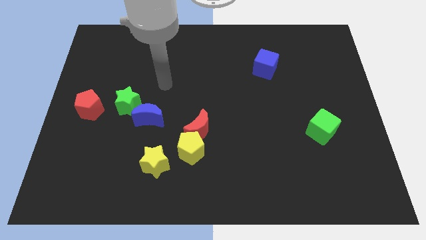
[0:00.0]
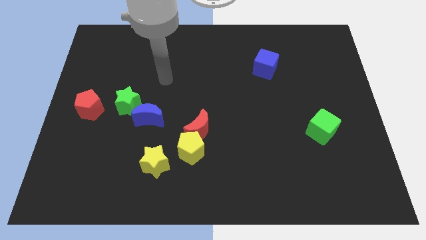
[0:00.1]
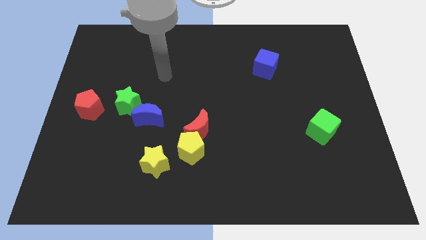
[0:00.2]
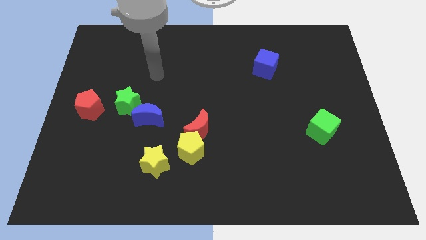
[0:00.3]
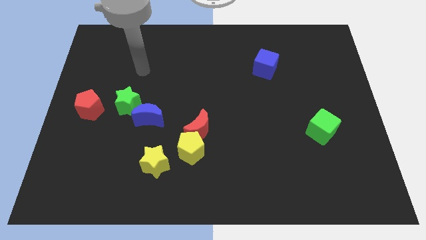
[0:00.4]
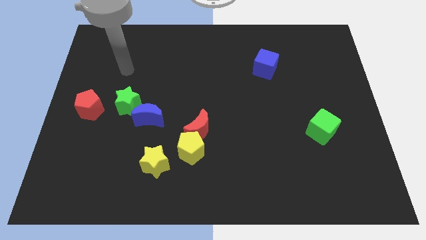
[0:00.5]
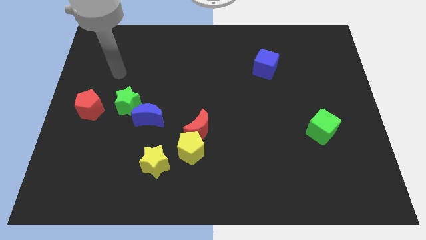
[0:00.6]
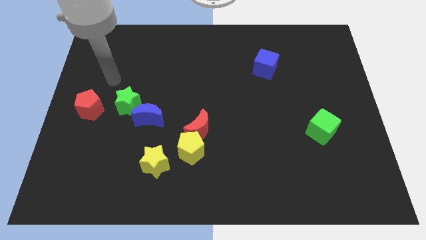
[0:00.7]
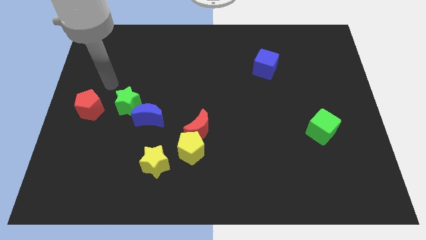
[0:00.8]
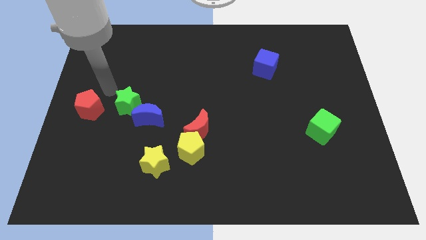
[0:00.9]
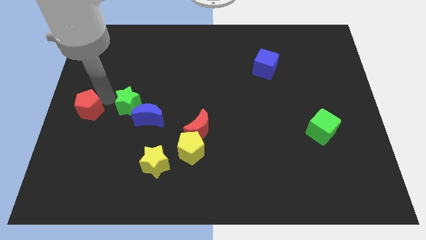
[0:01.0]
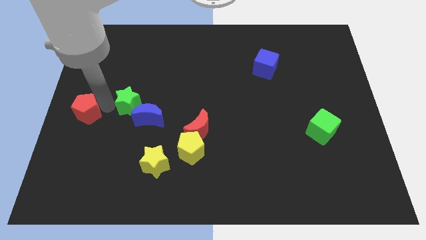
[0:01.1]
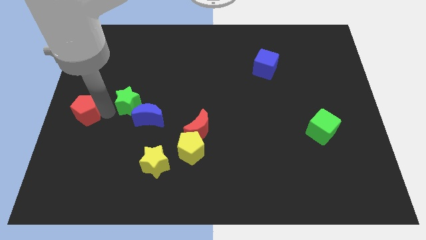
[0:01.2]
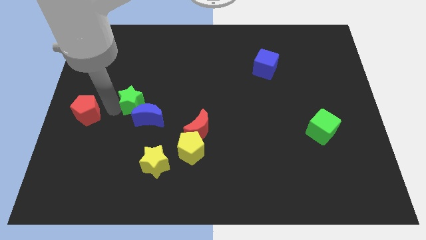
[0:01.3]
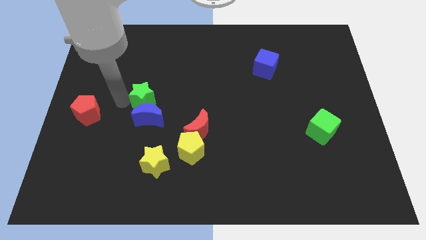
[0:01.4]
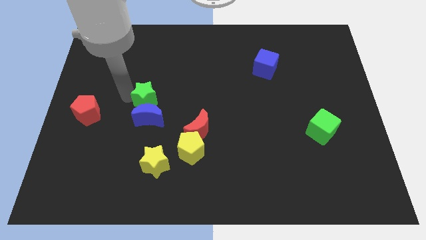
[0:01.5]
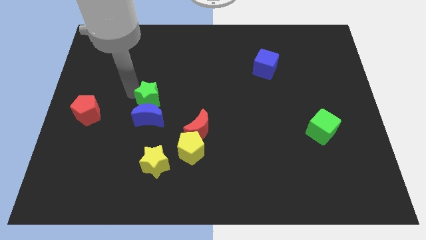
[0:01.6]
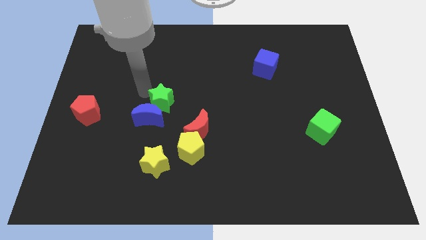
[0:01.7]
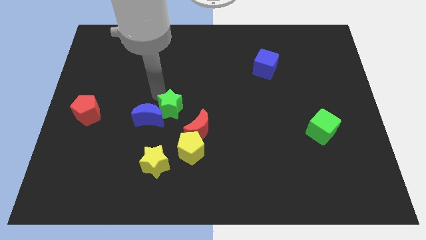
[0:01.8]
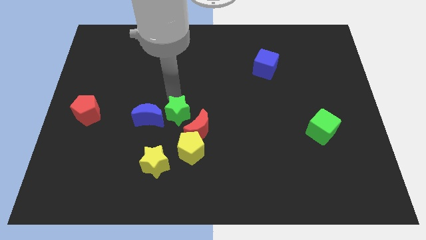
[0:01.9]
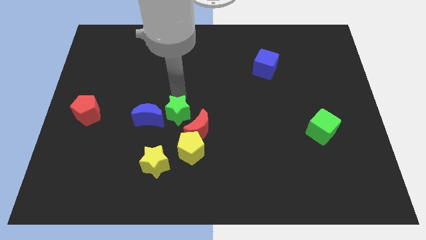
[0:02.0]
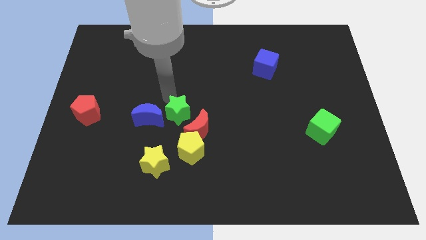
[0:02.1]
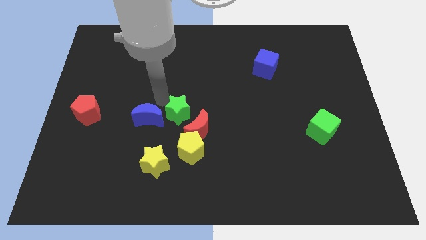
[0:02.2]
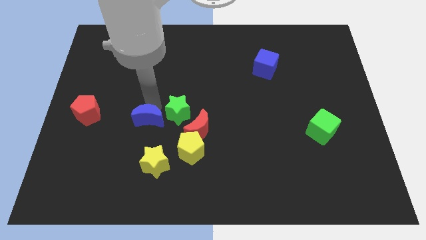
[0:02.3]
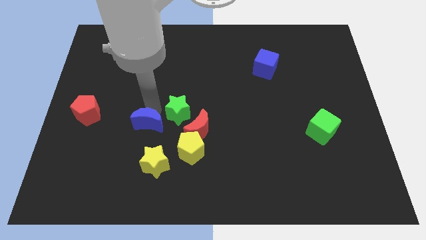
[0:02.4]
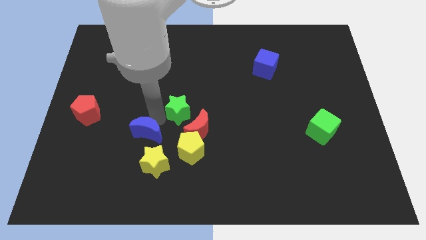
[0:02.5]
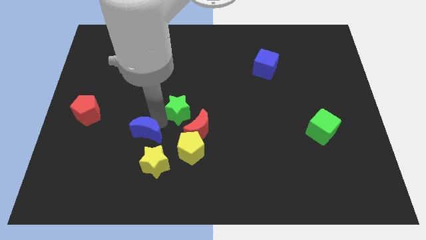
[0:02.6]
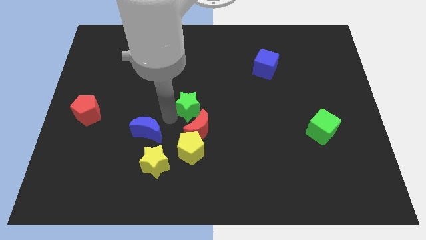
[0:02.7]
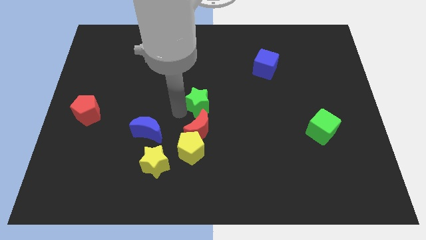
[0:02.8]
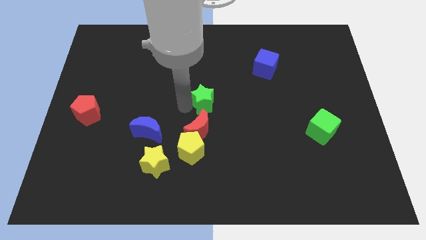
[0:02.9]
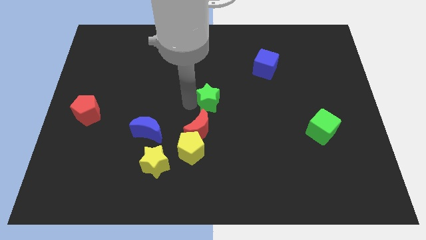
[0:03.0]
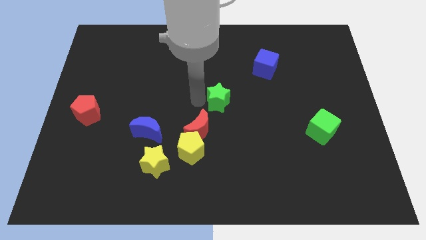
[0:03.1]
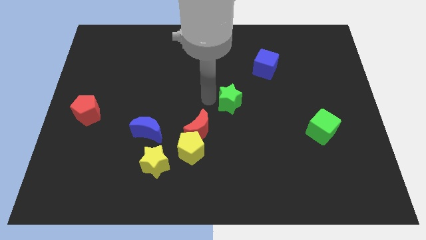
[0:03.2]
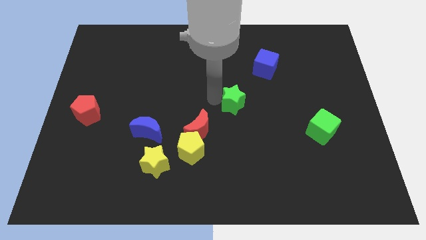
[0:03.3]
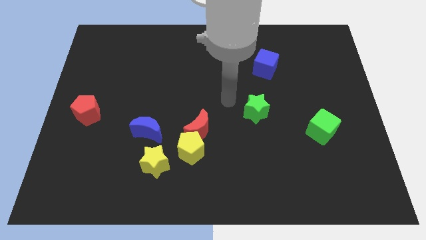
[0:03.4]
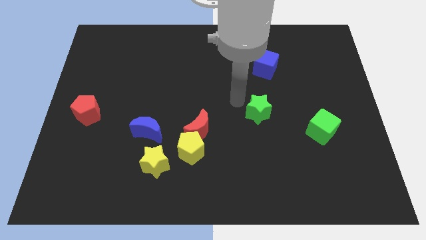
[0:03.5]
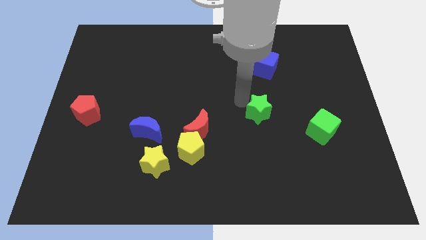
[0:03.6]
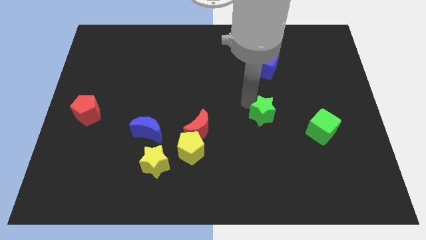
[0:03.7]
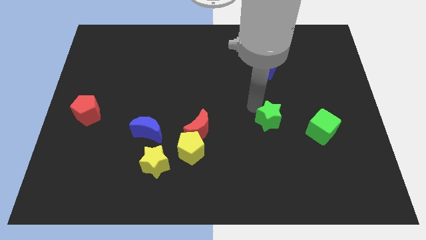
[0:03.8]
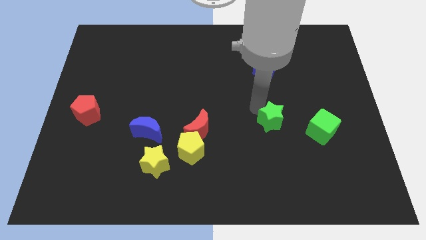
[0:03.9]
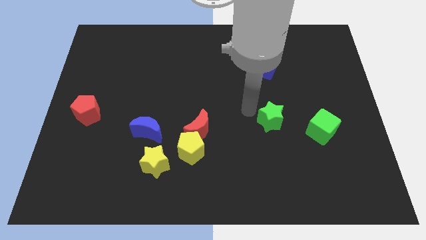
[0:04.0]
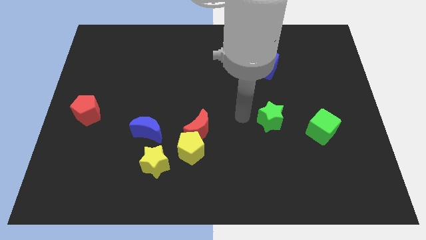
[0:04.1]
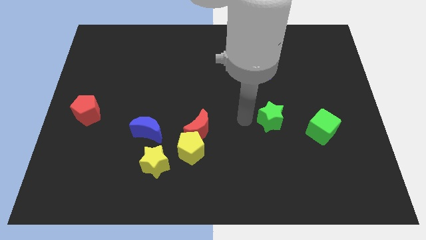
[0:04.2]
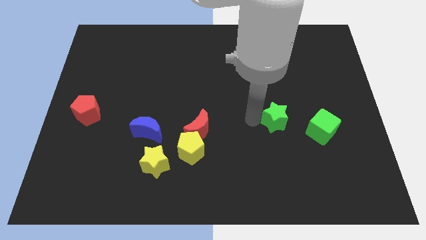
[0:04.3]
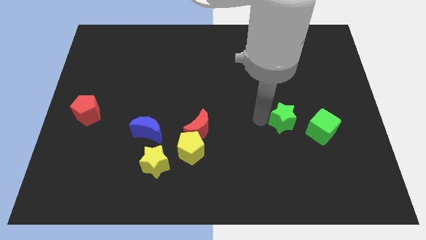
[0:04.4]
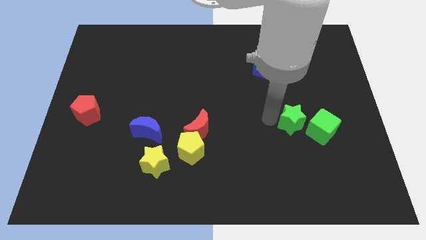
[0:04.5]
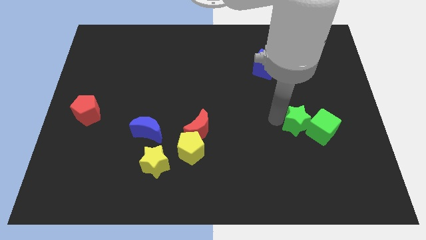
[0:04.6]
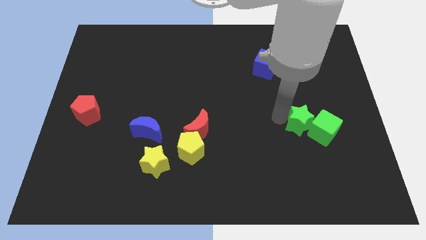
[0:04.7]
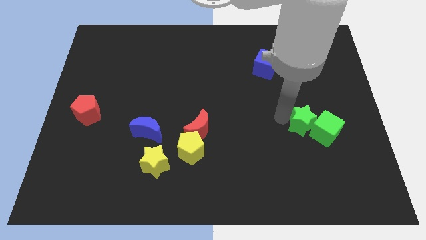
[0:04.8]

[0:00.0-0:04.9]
put the green star to the green cube

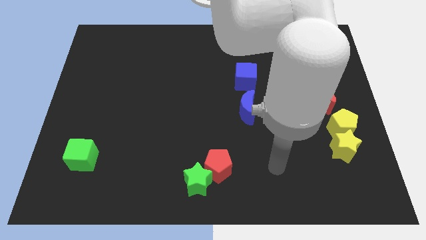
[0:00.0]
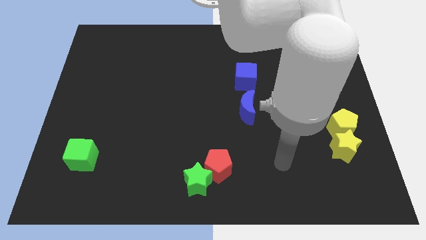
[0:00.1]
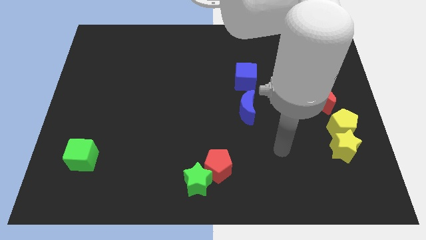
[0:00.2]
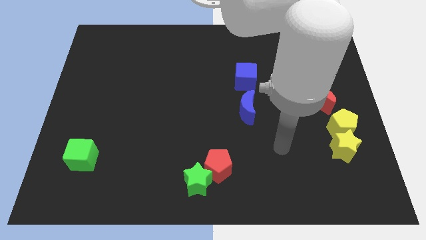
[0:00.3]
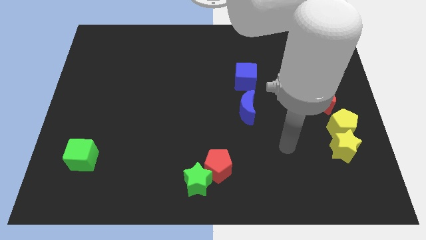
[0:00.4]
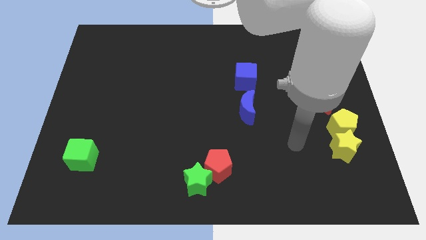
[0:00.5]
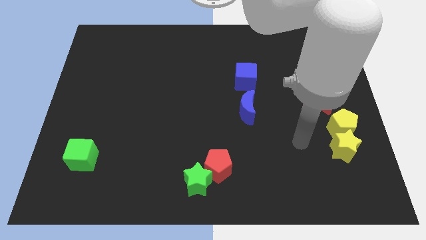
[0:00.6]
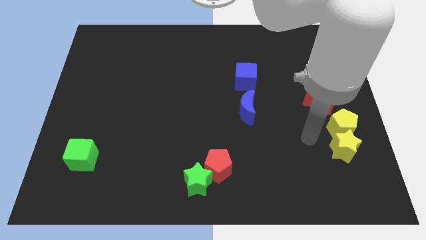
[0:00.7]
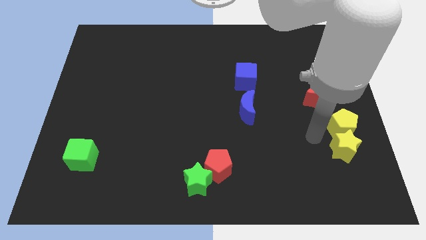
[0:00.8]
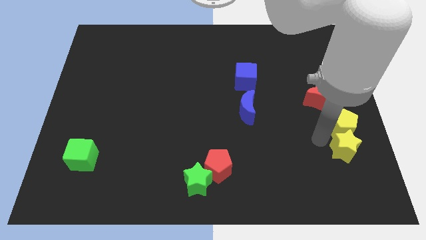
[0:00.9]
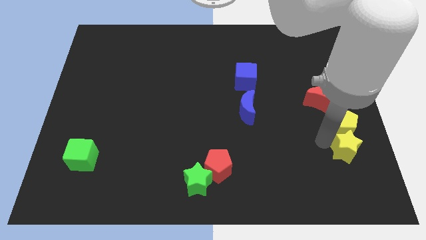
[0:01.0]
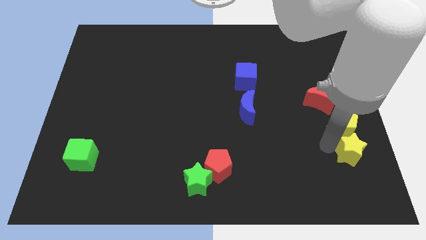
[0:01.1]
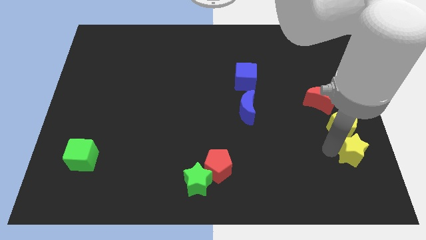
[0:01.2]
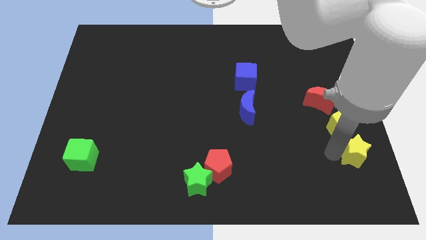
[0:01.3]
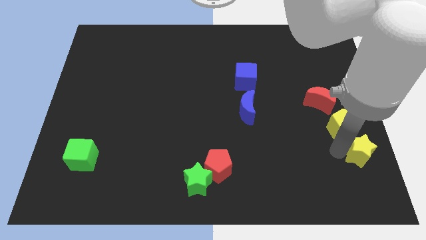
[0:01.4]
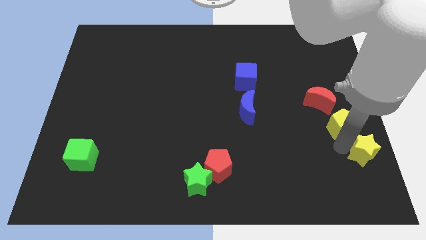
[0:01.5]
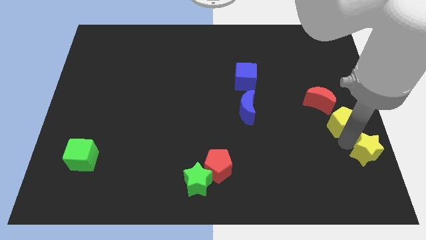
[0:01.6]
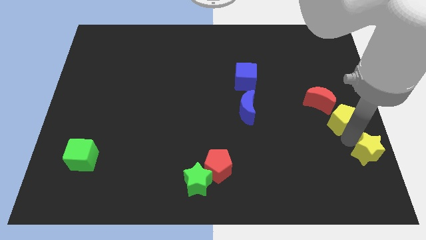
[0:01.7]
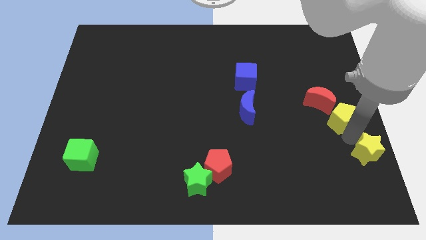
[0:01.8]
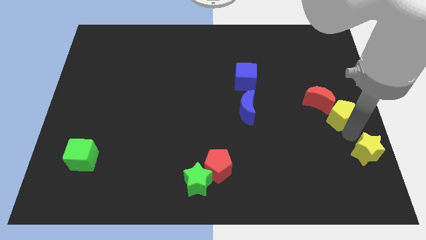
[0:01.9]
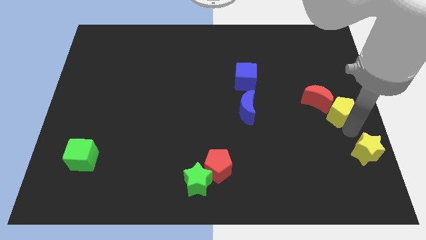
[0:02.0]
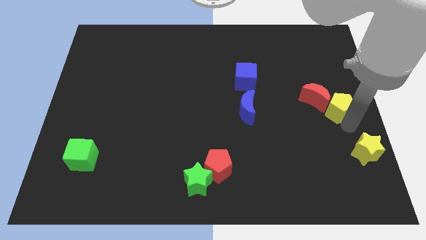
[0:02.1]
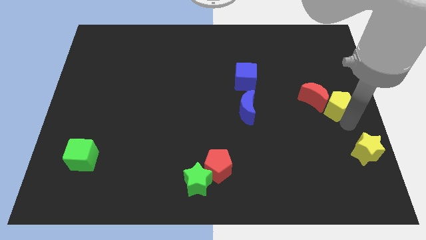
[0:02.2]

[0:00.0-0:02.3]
push the yellow pentagon towards the red moon

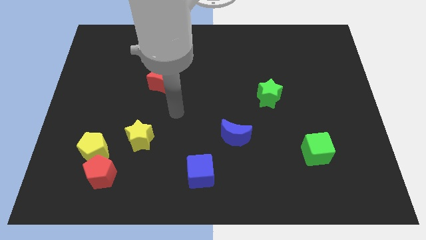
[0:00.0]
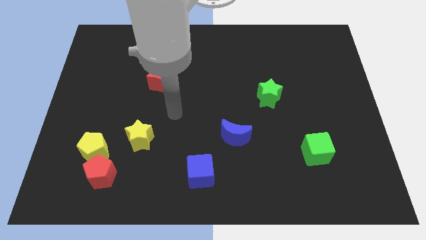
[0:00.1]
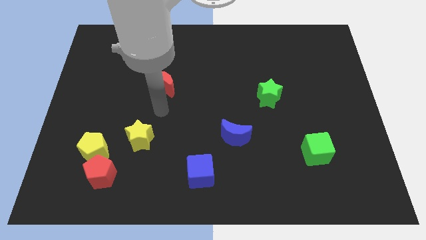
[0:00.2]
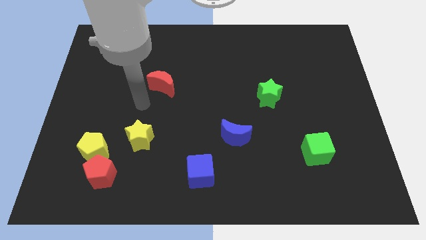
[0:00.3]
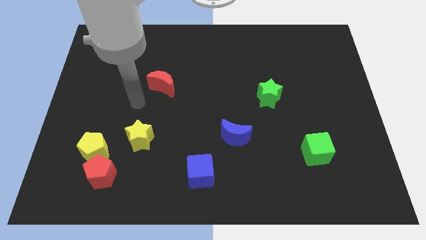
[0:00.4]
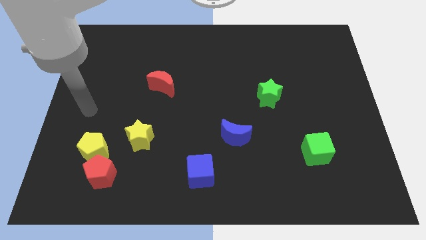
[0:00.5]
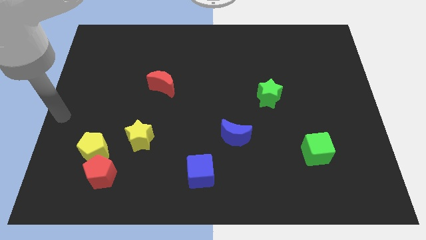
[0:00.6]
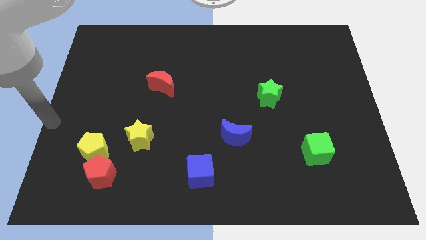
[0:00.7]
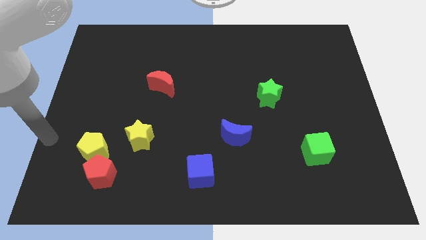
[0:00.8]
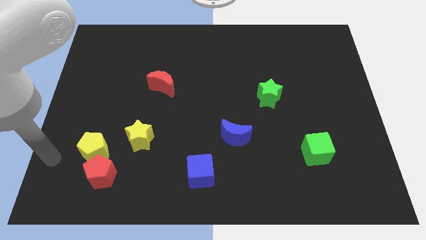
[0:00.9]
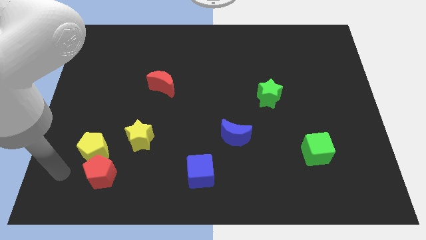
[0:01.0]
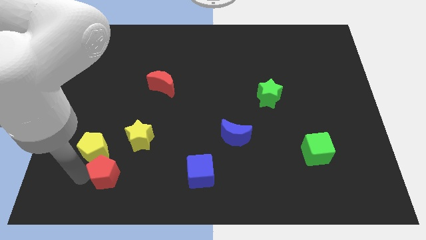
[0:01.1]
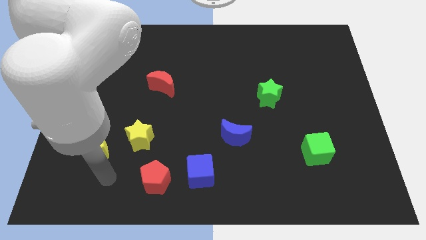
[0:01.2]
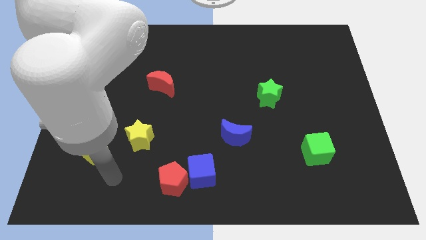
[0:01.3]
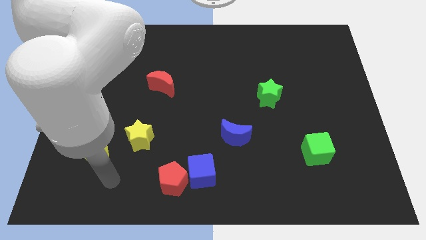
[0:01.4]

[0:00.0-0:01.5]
slide the red pentagon to the blue cube

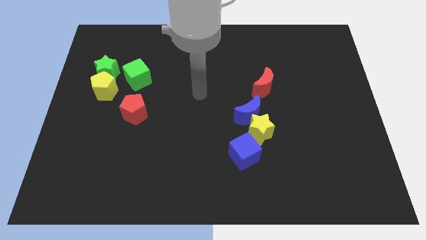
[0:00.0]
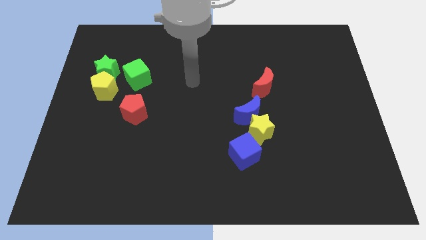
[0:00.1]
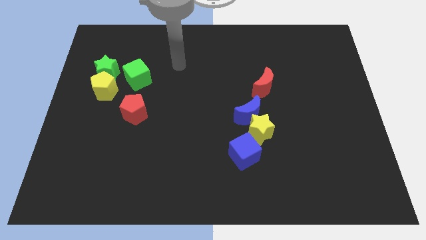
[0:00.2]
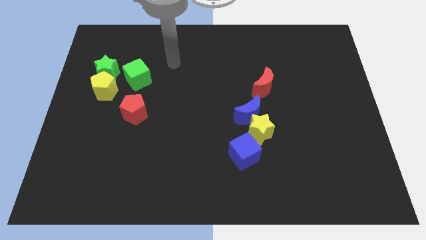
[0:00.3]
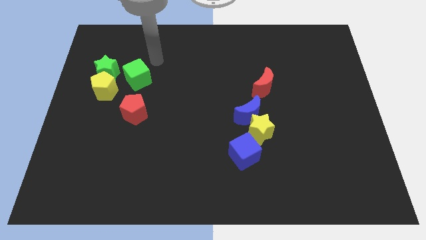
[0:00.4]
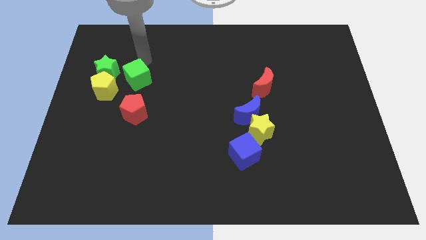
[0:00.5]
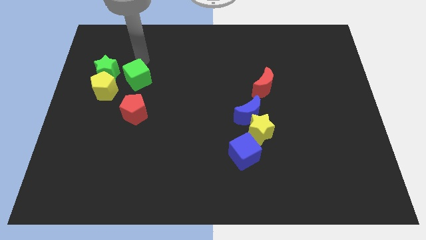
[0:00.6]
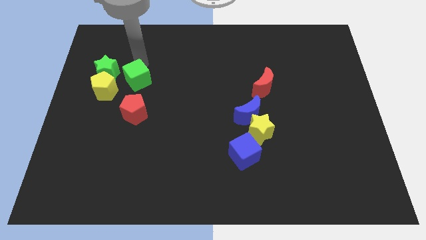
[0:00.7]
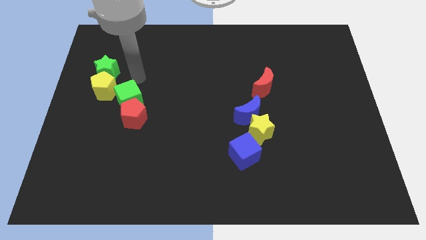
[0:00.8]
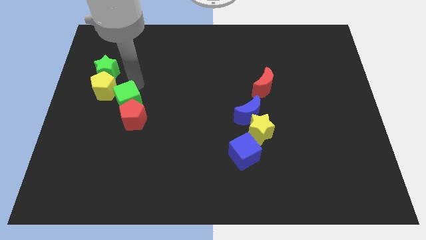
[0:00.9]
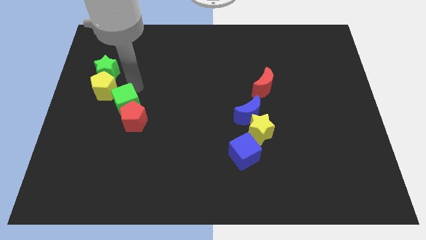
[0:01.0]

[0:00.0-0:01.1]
put the green cube next to the red pentagon
